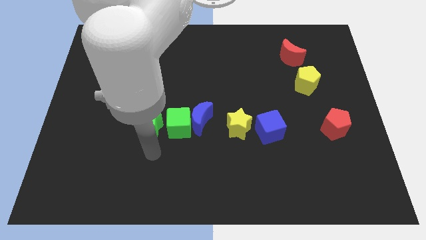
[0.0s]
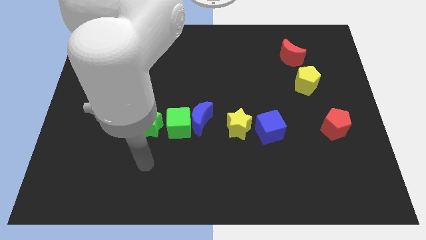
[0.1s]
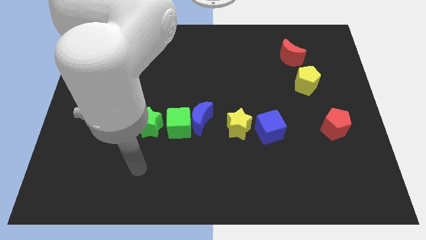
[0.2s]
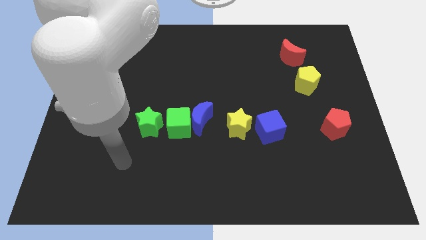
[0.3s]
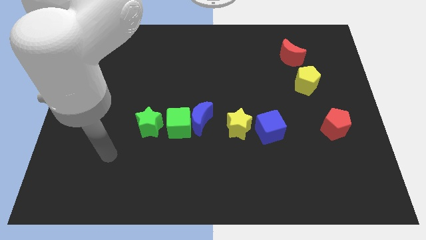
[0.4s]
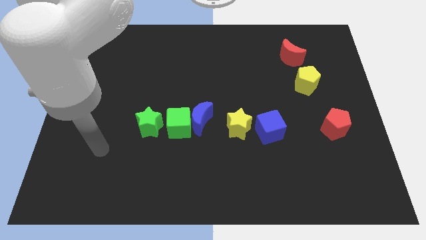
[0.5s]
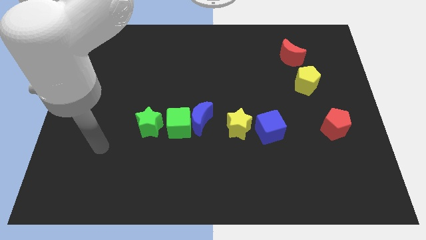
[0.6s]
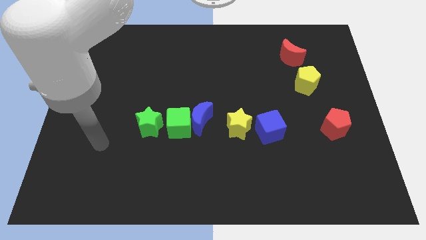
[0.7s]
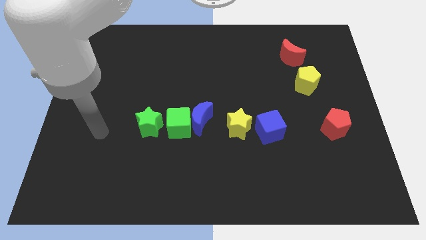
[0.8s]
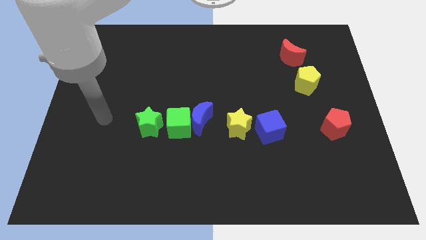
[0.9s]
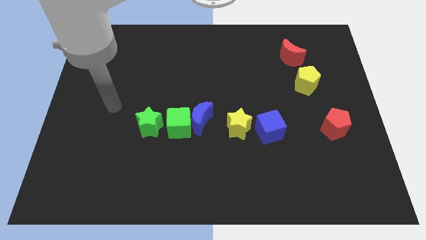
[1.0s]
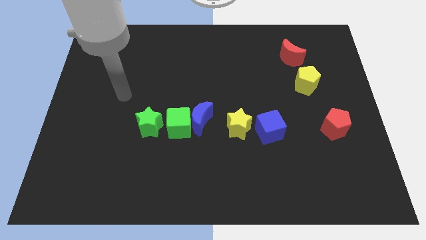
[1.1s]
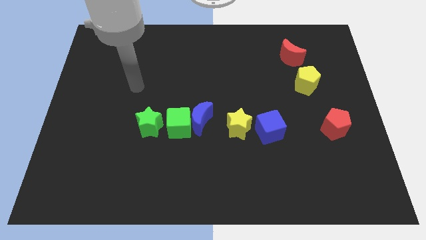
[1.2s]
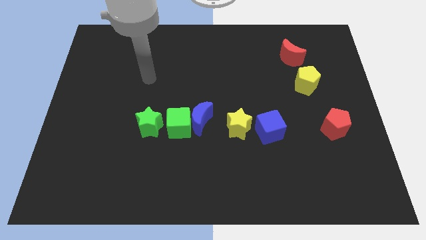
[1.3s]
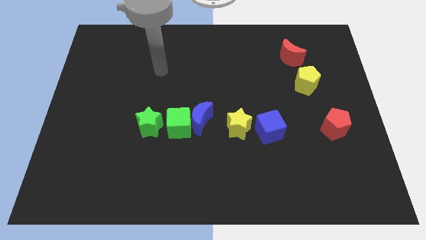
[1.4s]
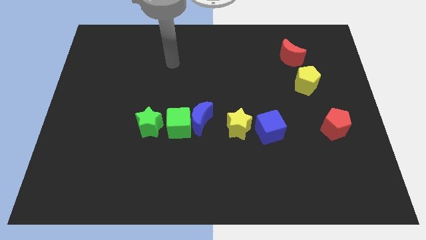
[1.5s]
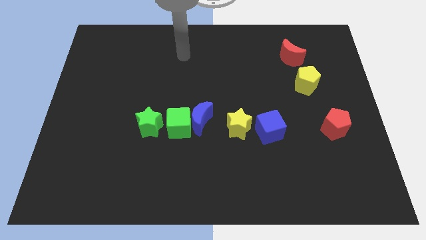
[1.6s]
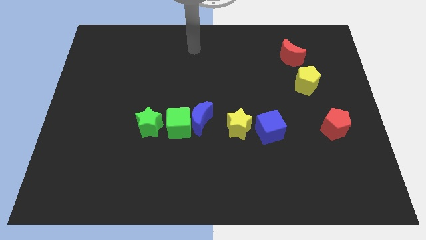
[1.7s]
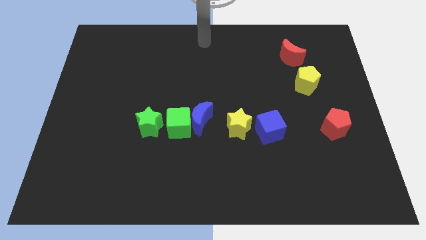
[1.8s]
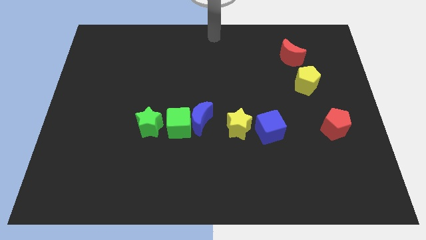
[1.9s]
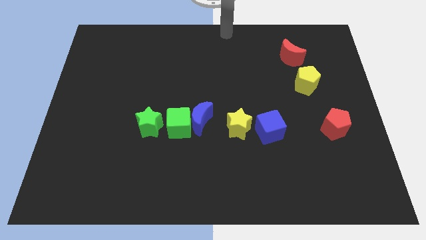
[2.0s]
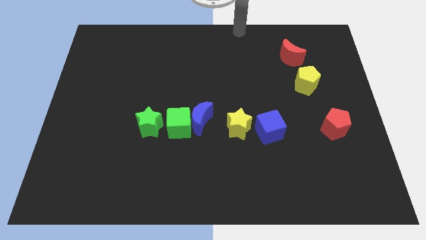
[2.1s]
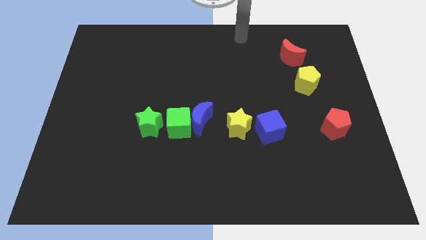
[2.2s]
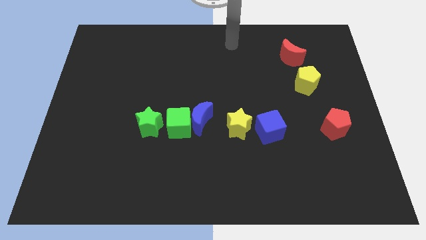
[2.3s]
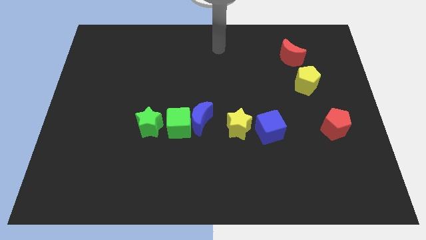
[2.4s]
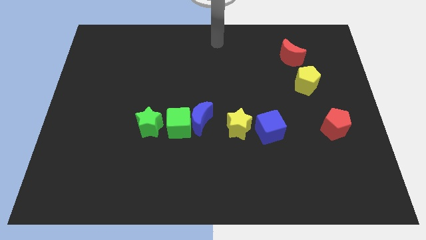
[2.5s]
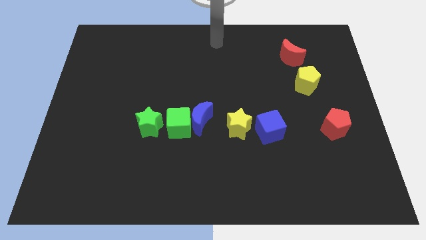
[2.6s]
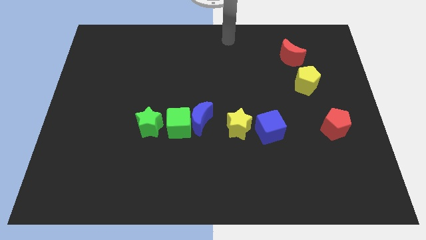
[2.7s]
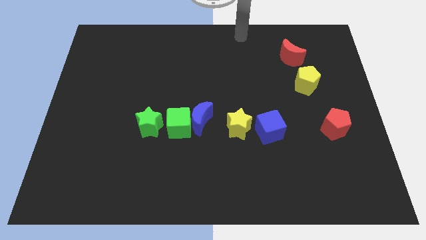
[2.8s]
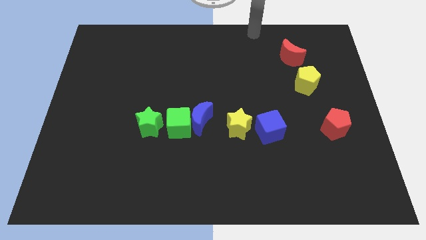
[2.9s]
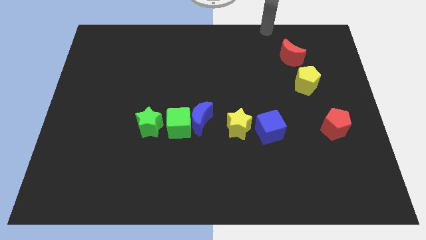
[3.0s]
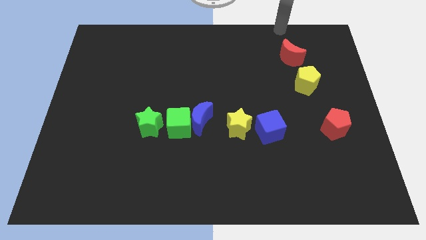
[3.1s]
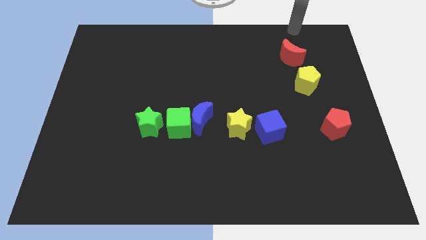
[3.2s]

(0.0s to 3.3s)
move arm above the red moon

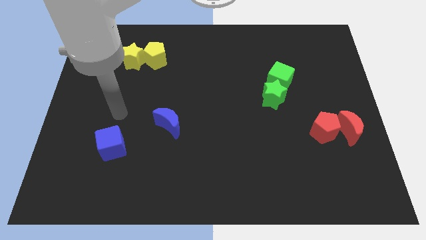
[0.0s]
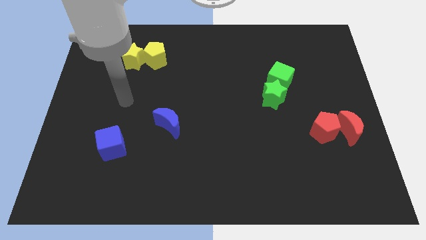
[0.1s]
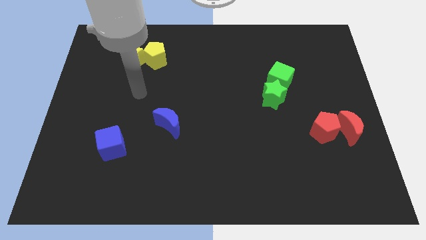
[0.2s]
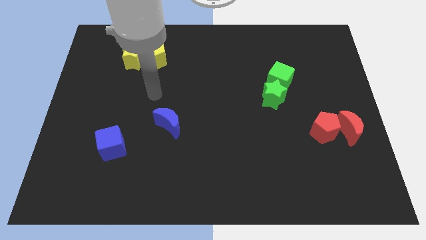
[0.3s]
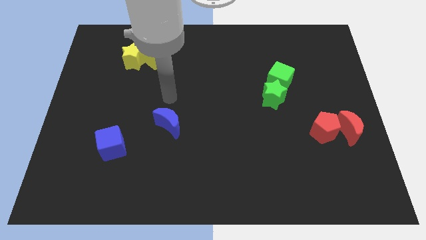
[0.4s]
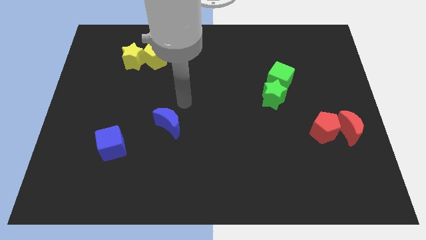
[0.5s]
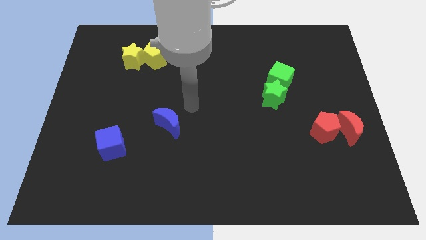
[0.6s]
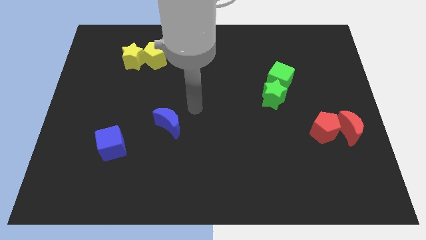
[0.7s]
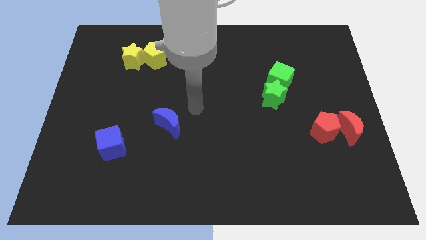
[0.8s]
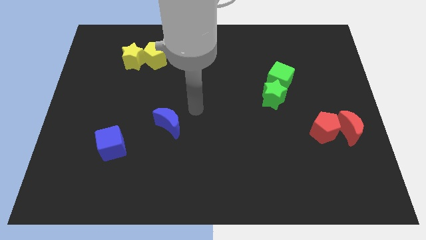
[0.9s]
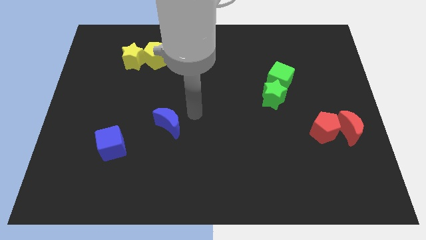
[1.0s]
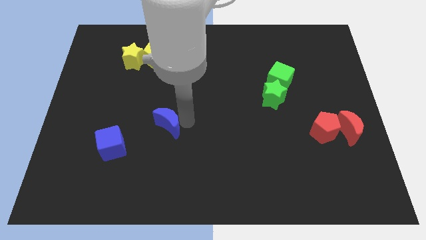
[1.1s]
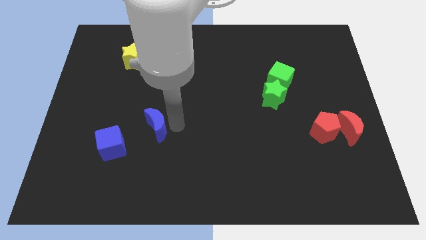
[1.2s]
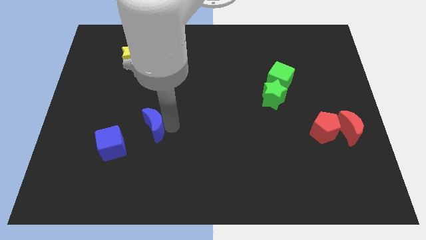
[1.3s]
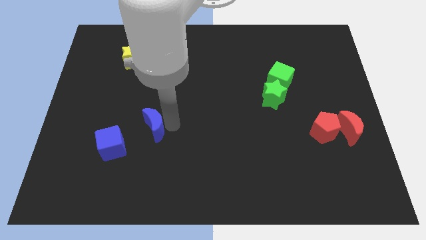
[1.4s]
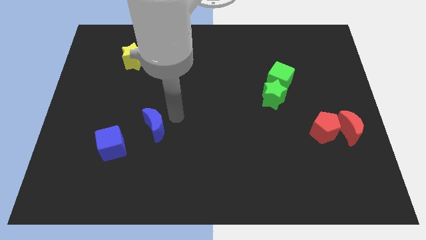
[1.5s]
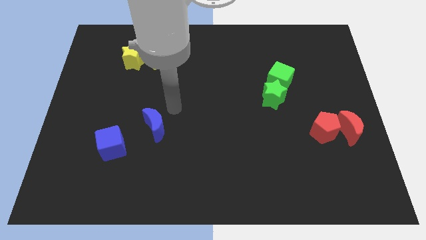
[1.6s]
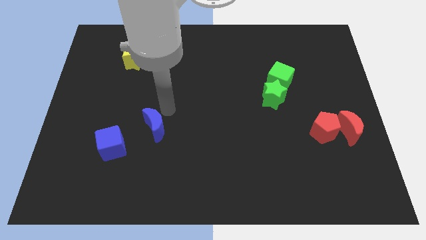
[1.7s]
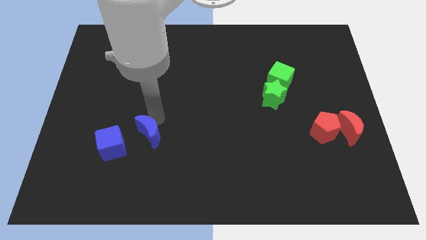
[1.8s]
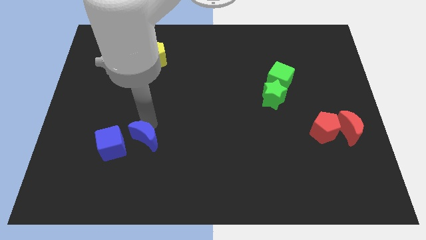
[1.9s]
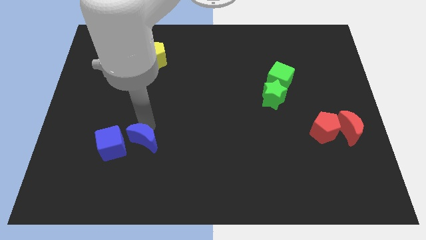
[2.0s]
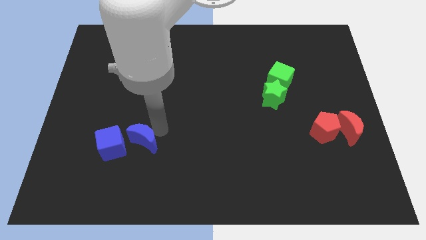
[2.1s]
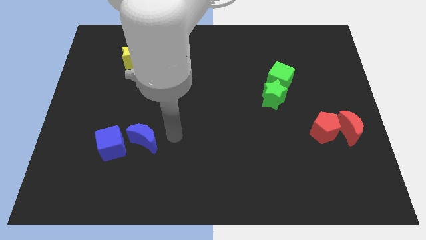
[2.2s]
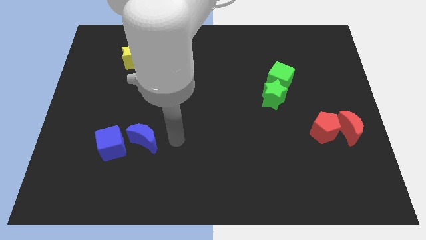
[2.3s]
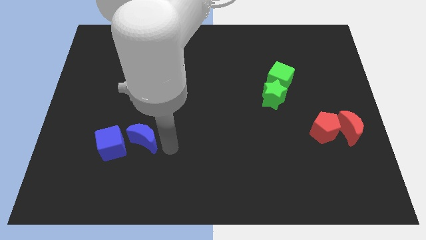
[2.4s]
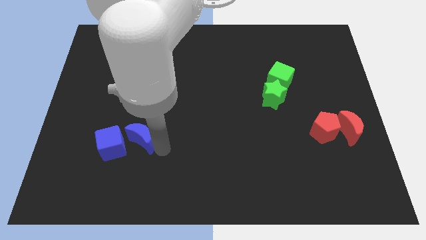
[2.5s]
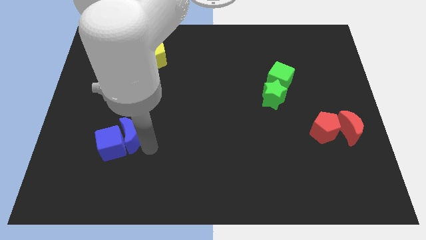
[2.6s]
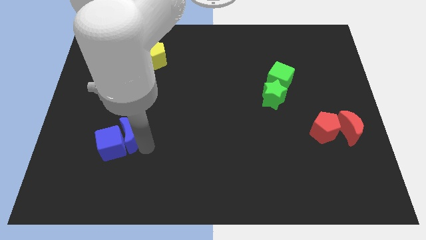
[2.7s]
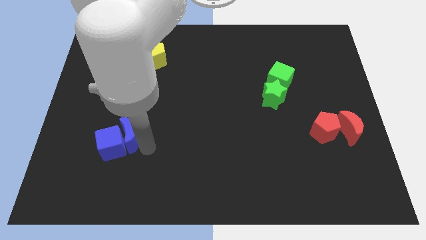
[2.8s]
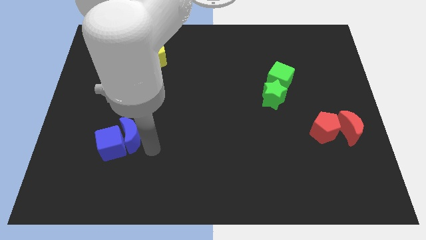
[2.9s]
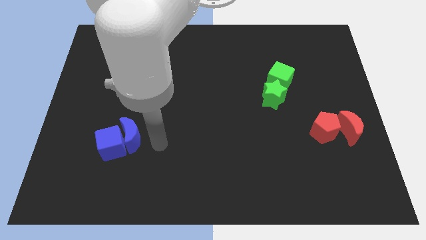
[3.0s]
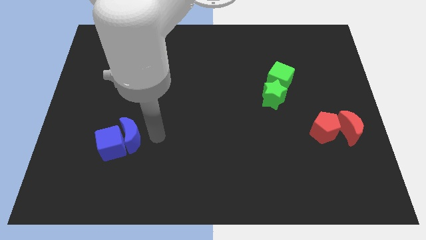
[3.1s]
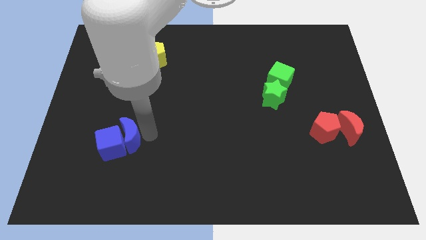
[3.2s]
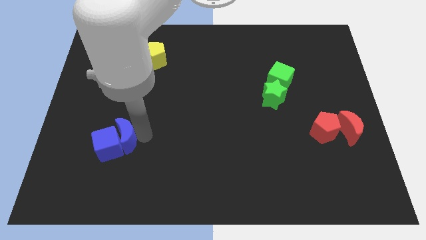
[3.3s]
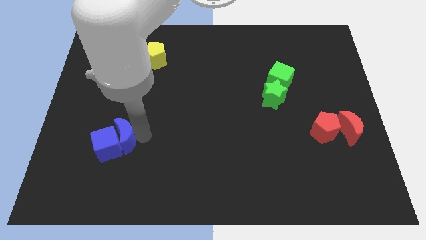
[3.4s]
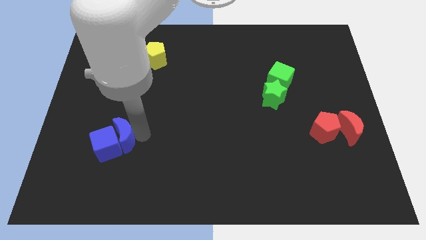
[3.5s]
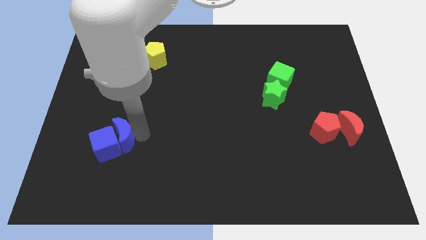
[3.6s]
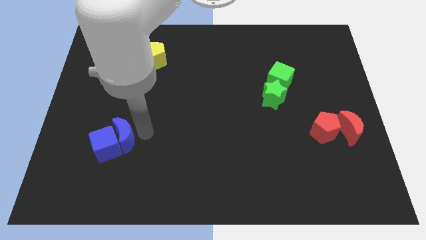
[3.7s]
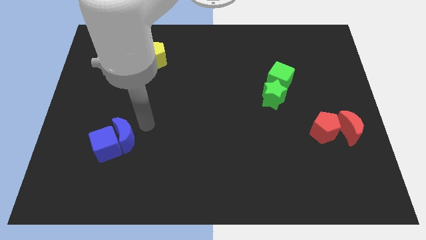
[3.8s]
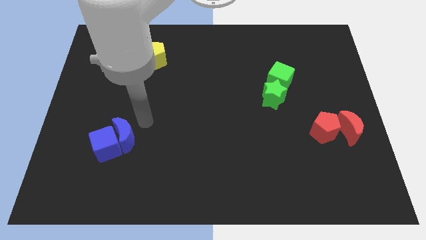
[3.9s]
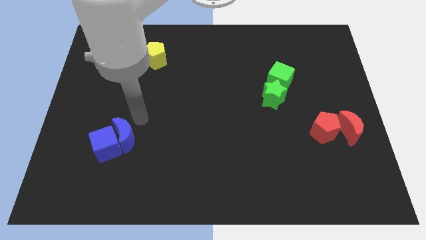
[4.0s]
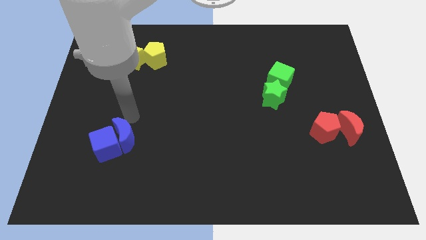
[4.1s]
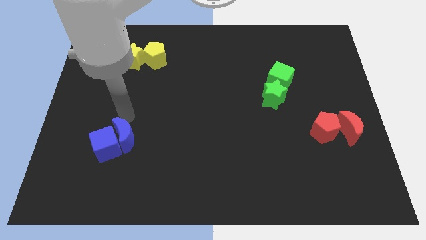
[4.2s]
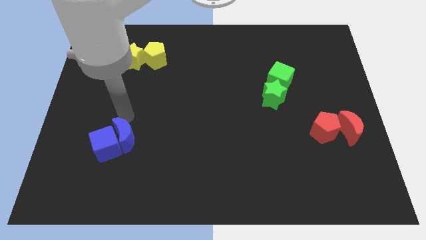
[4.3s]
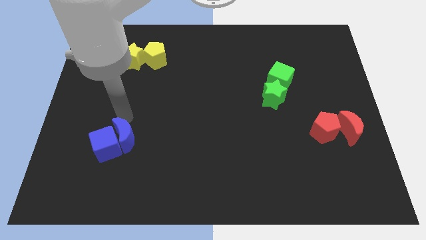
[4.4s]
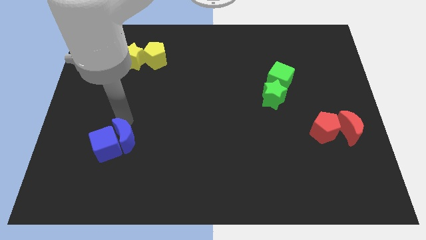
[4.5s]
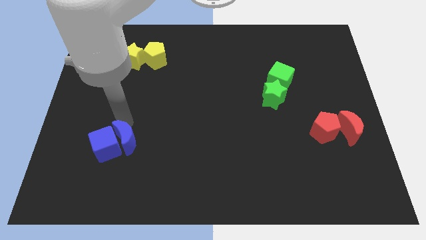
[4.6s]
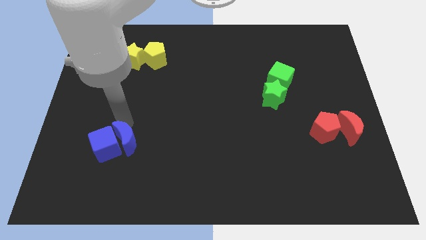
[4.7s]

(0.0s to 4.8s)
move blue crescent into the blue cube

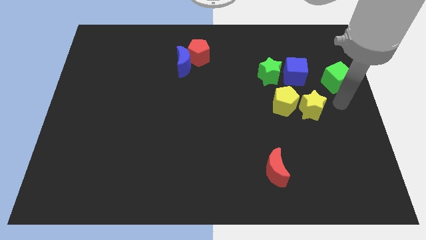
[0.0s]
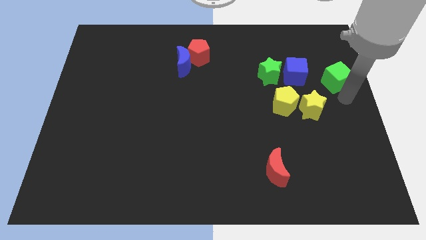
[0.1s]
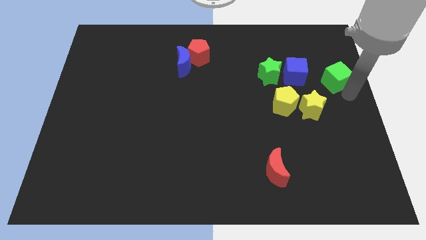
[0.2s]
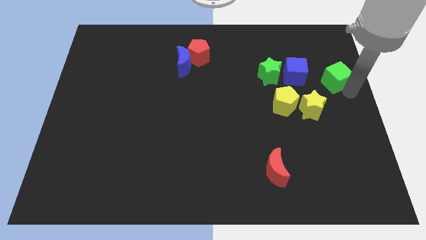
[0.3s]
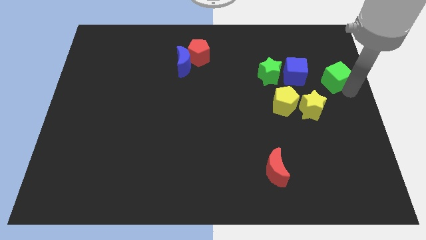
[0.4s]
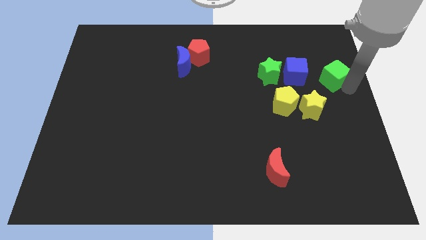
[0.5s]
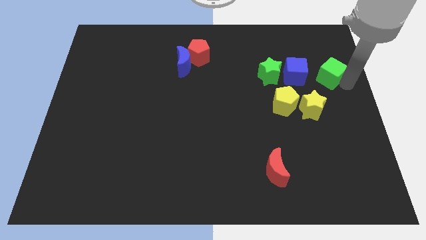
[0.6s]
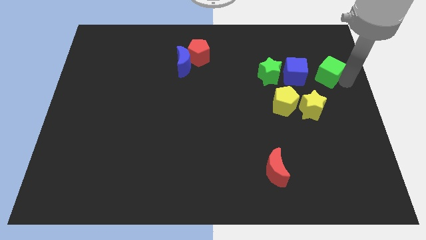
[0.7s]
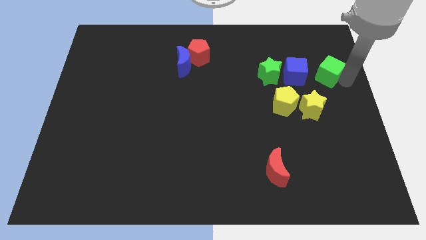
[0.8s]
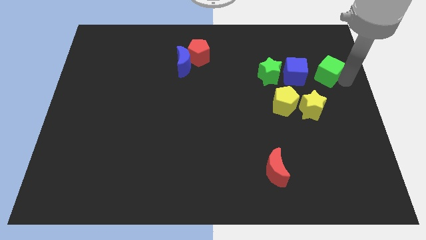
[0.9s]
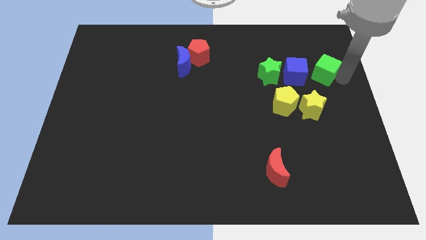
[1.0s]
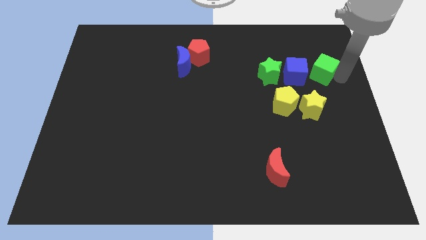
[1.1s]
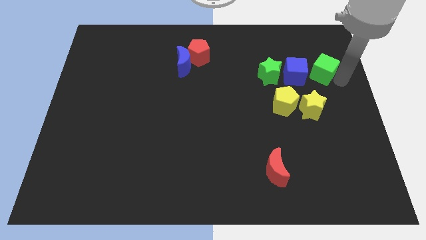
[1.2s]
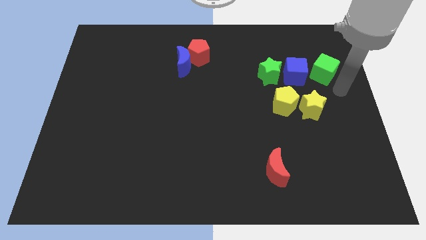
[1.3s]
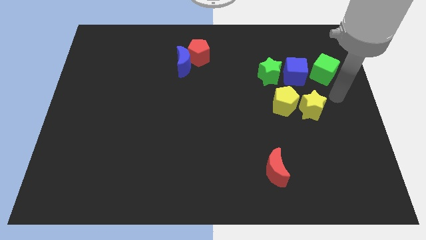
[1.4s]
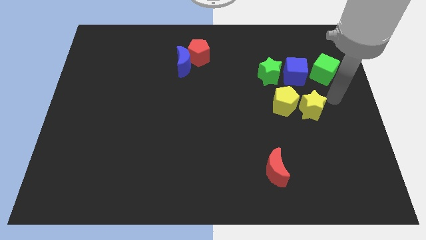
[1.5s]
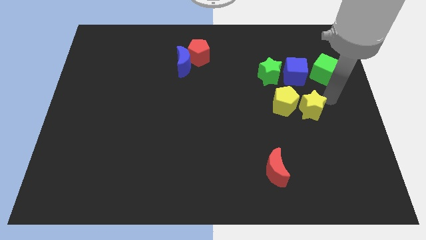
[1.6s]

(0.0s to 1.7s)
place the green cube to the right side of the blue cube
